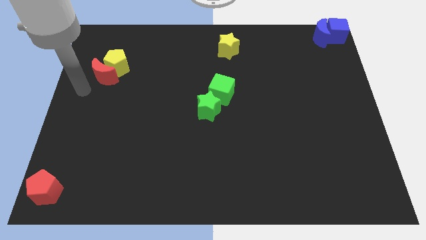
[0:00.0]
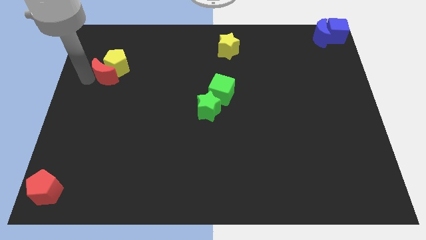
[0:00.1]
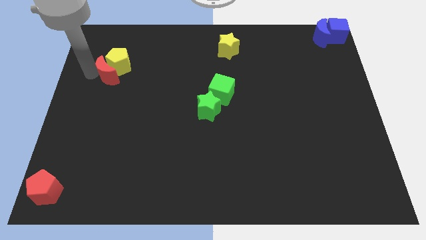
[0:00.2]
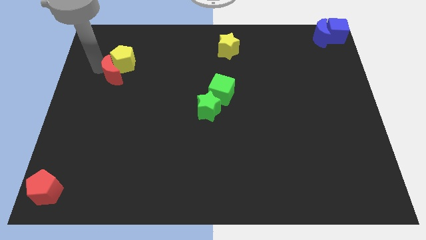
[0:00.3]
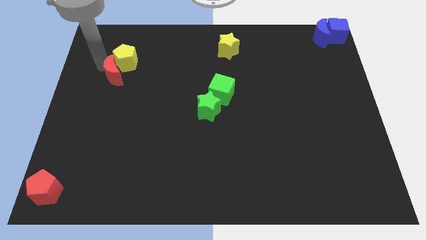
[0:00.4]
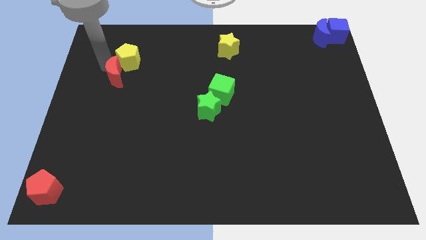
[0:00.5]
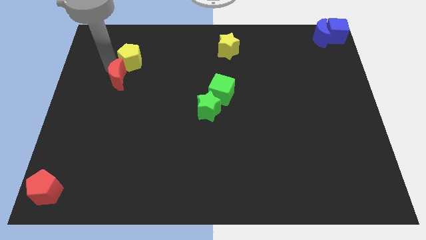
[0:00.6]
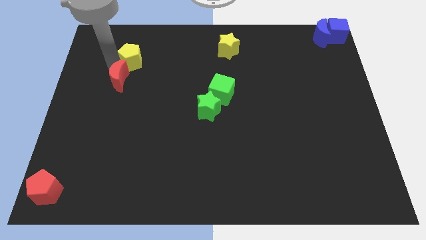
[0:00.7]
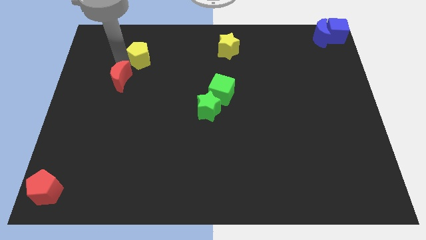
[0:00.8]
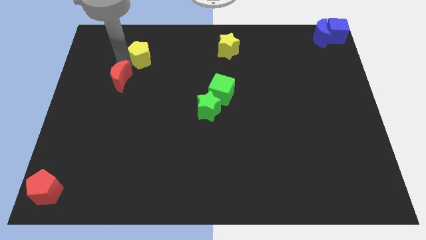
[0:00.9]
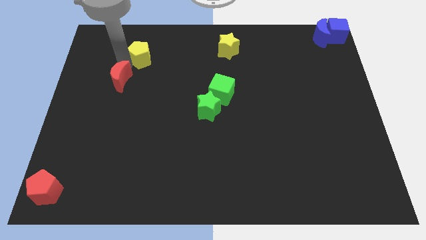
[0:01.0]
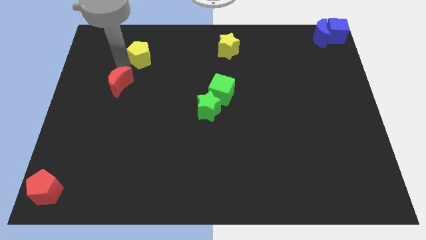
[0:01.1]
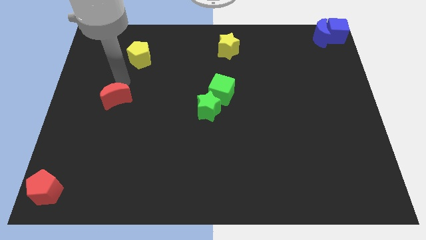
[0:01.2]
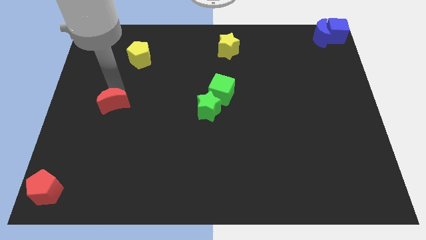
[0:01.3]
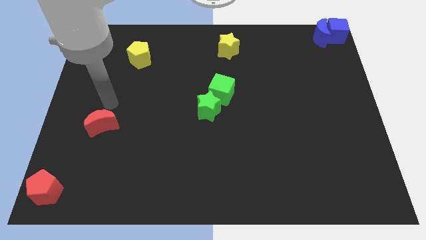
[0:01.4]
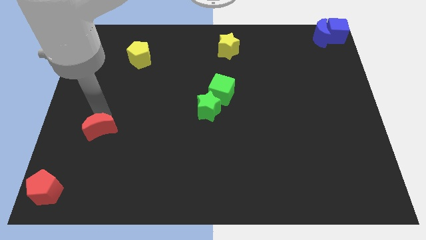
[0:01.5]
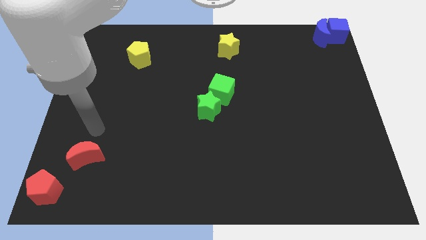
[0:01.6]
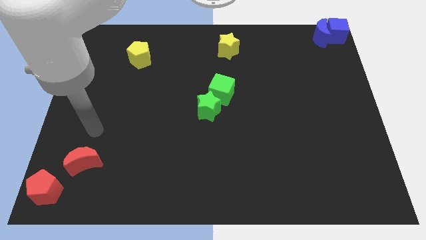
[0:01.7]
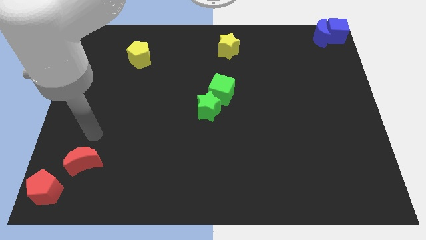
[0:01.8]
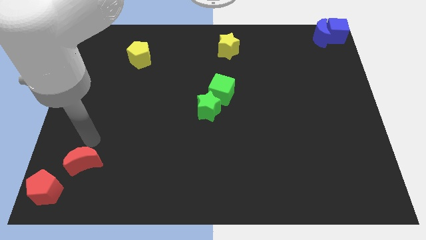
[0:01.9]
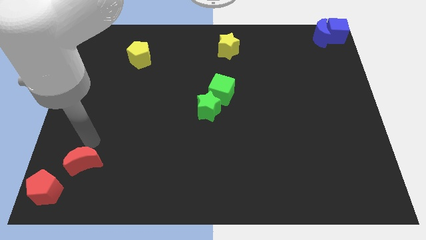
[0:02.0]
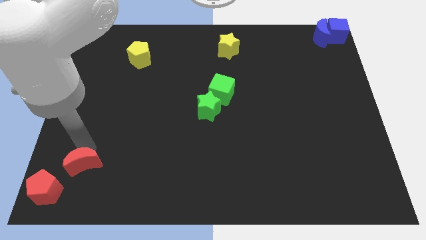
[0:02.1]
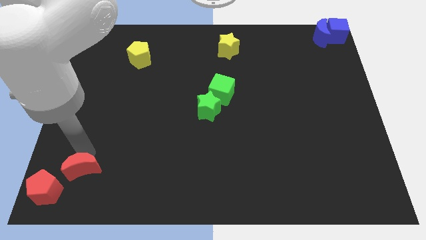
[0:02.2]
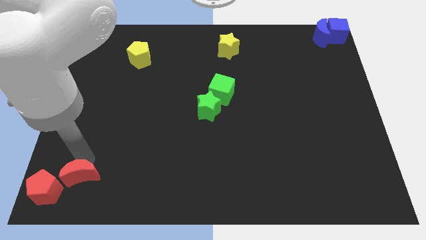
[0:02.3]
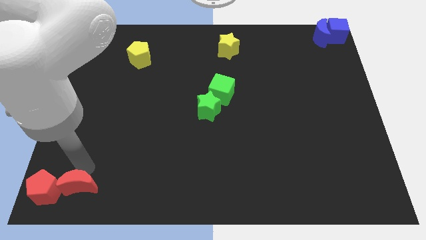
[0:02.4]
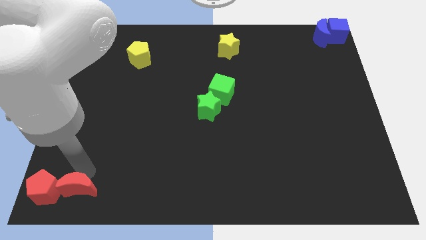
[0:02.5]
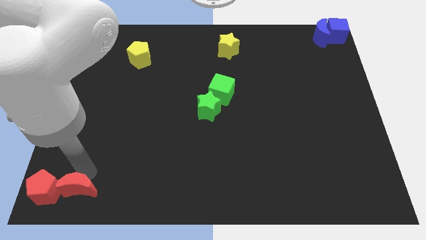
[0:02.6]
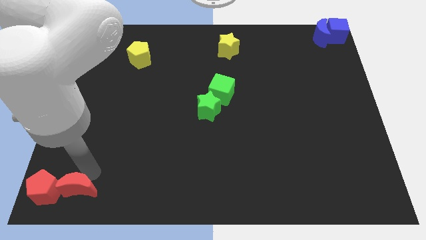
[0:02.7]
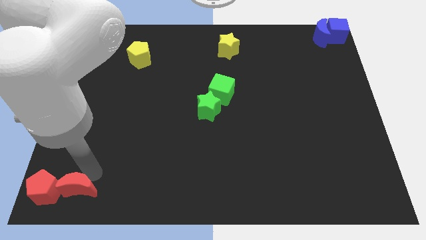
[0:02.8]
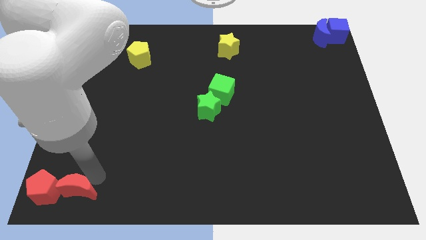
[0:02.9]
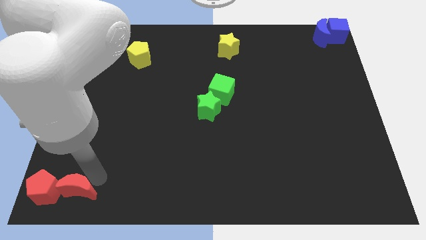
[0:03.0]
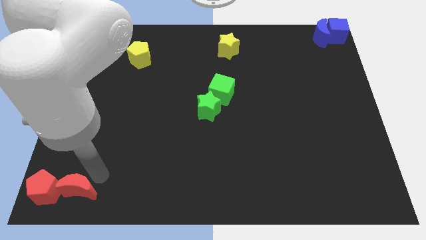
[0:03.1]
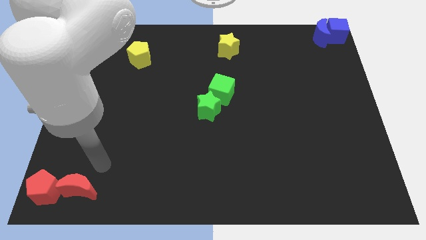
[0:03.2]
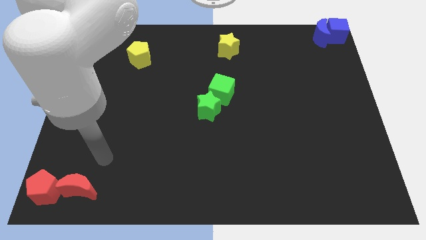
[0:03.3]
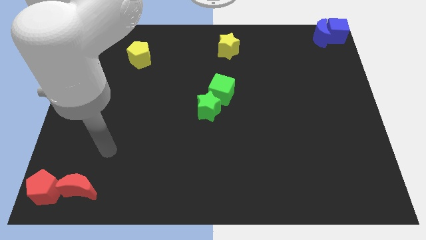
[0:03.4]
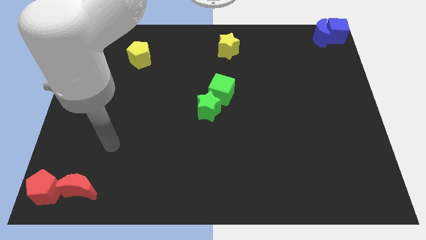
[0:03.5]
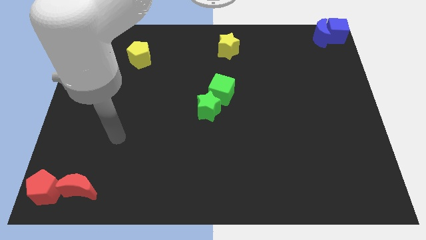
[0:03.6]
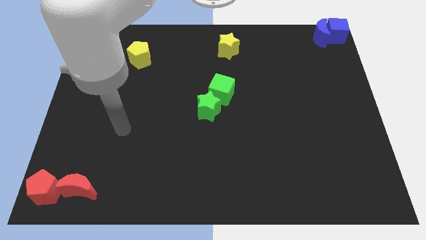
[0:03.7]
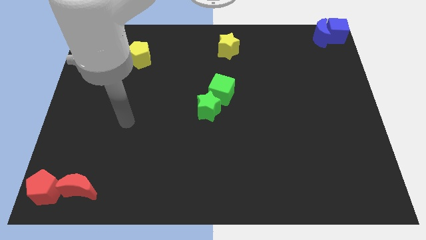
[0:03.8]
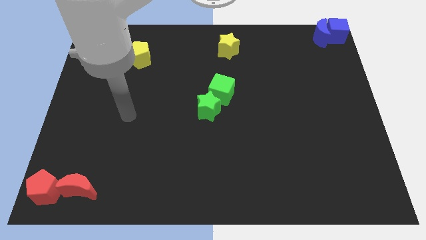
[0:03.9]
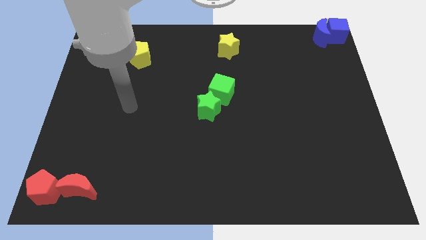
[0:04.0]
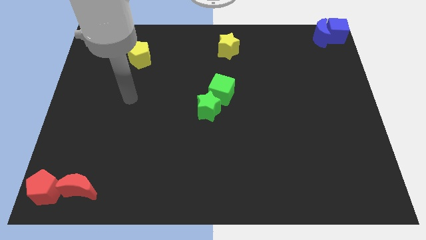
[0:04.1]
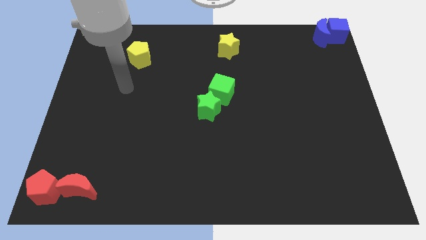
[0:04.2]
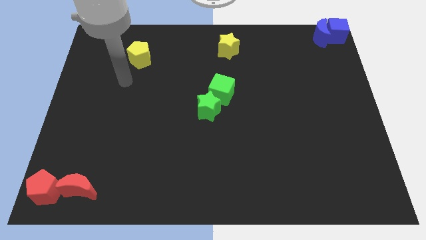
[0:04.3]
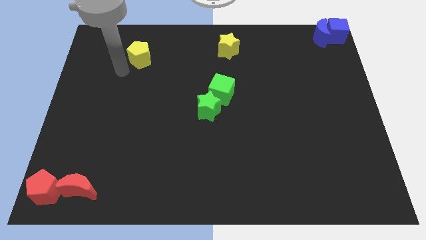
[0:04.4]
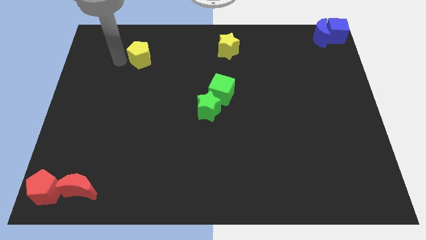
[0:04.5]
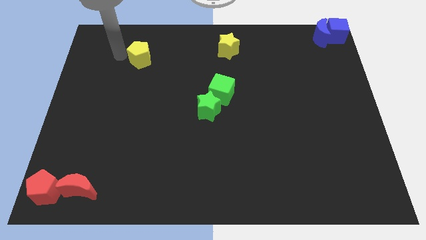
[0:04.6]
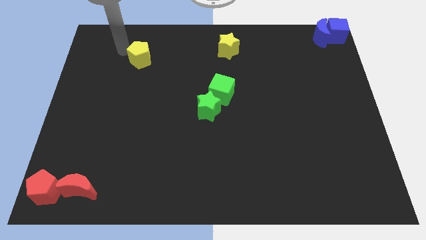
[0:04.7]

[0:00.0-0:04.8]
place red crescent to the right of red pentagon

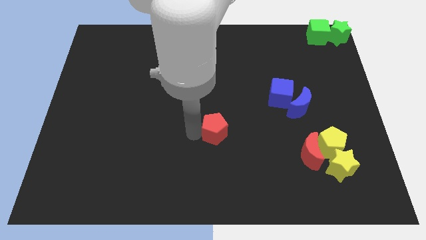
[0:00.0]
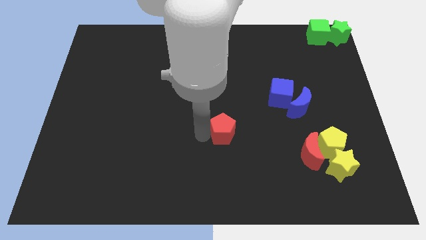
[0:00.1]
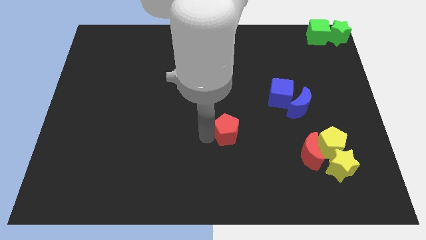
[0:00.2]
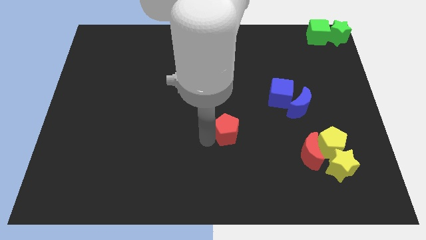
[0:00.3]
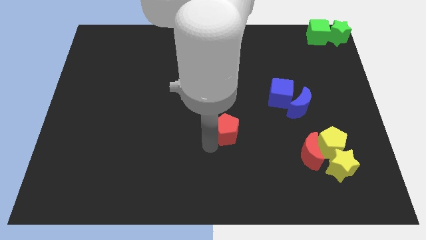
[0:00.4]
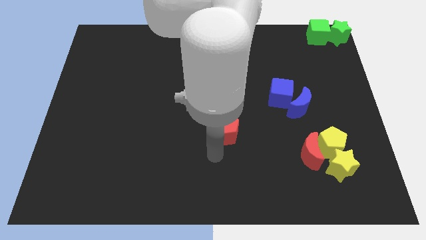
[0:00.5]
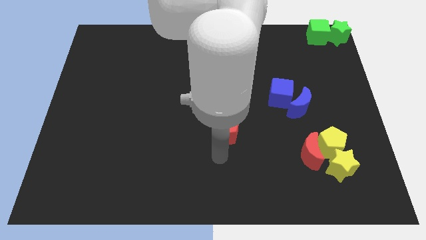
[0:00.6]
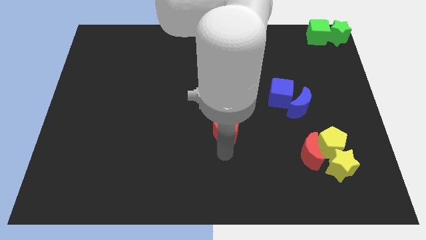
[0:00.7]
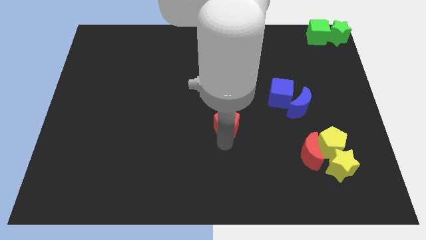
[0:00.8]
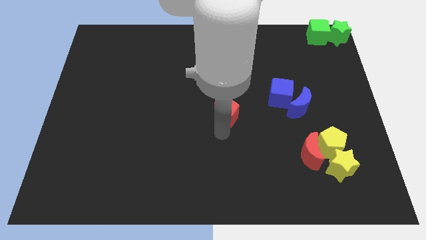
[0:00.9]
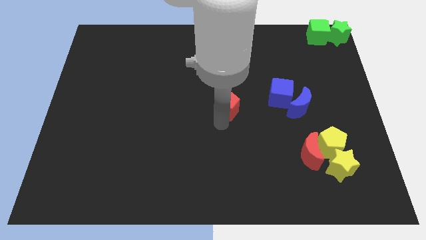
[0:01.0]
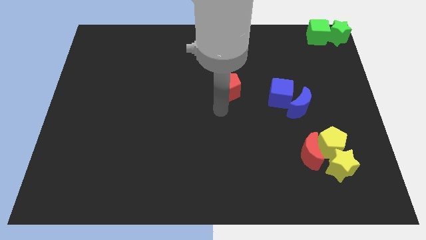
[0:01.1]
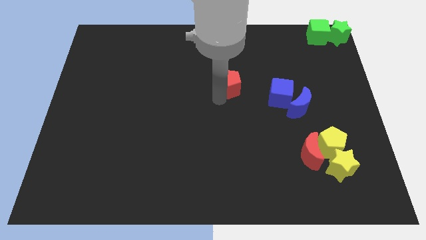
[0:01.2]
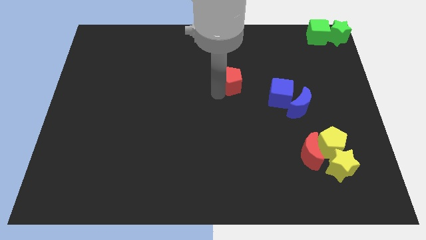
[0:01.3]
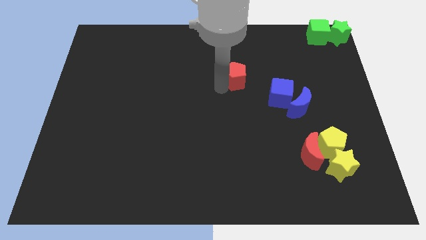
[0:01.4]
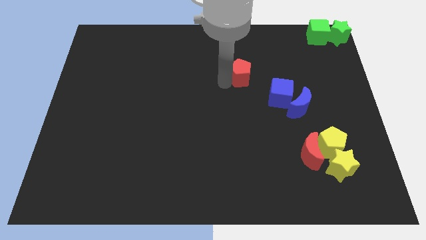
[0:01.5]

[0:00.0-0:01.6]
move the red pentagon to the top

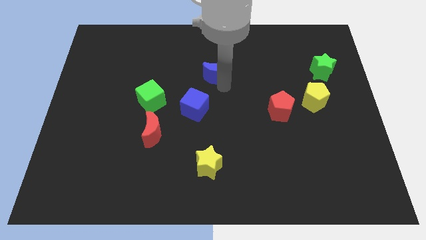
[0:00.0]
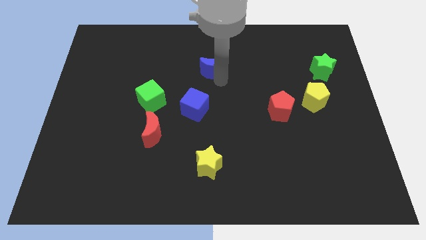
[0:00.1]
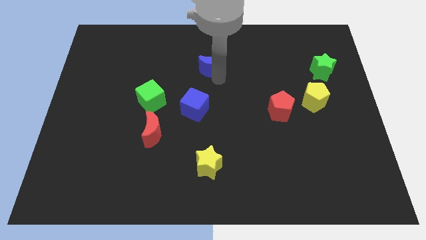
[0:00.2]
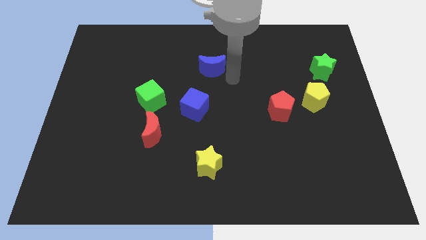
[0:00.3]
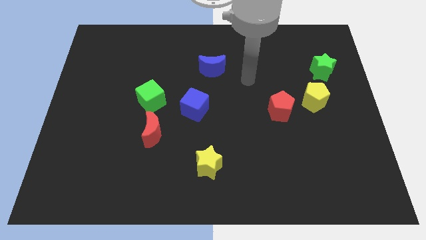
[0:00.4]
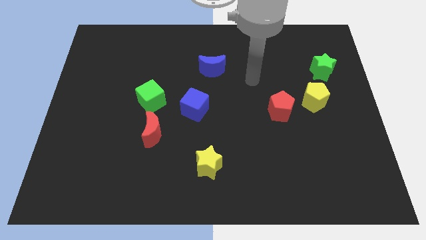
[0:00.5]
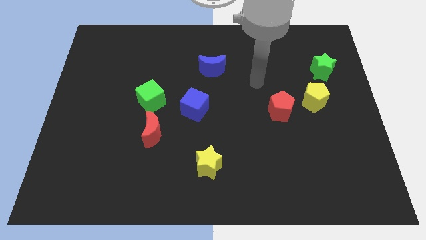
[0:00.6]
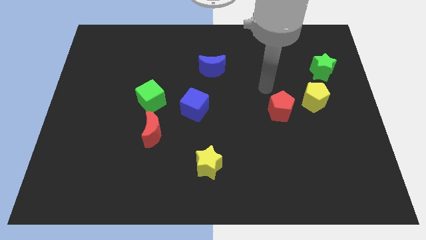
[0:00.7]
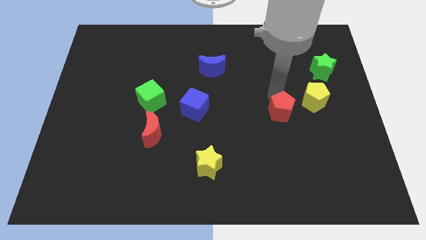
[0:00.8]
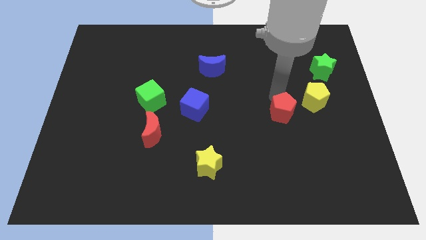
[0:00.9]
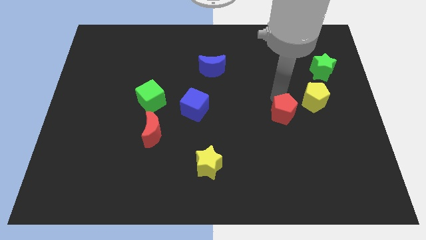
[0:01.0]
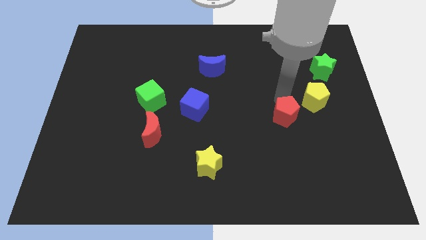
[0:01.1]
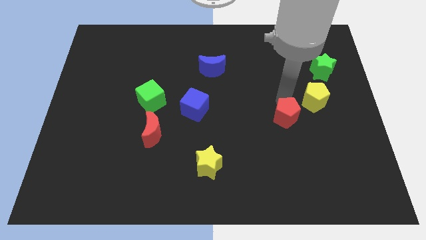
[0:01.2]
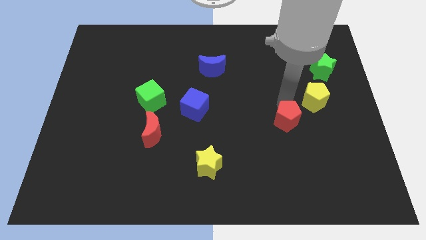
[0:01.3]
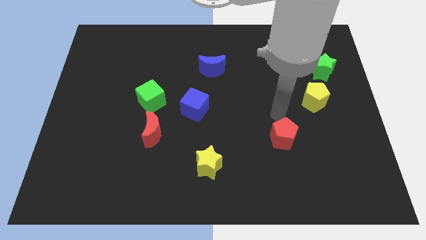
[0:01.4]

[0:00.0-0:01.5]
slightly move the red pentagon towards the down

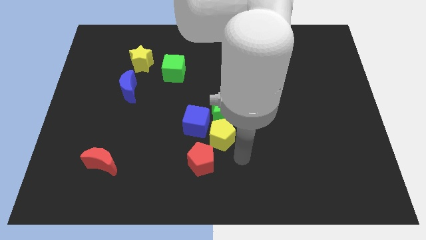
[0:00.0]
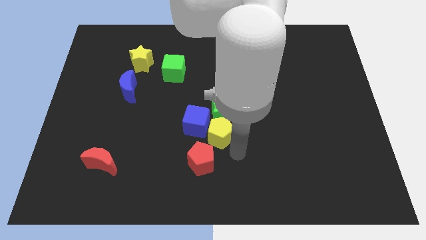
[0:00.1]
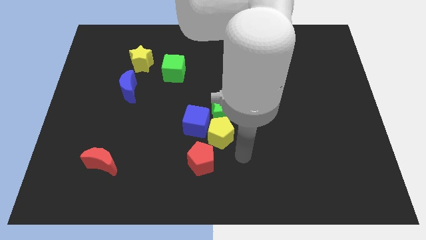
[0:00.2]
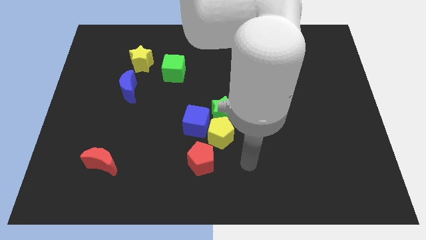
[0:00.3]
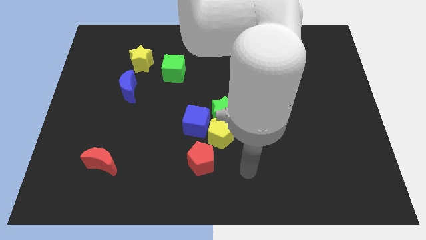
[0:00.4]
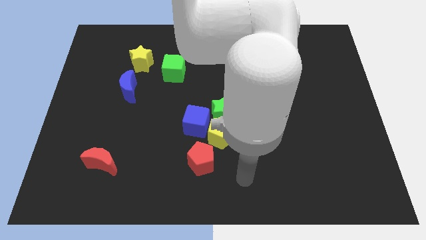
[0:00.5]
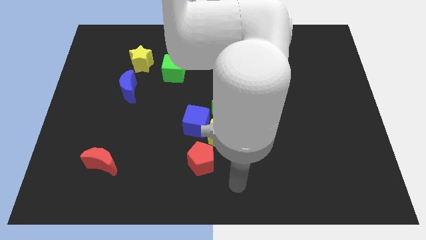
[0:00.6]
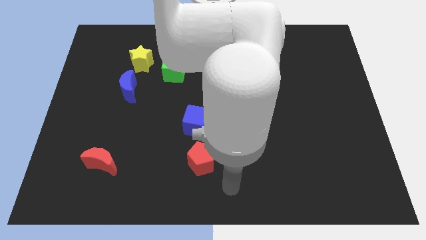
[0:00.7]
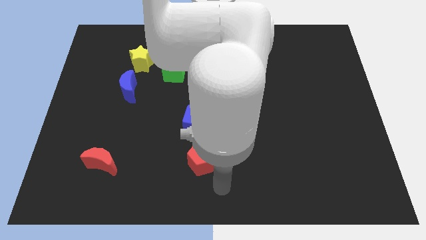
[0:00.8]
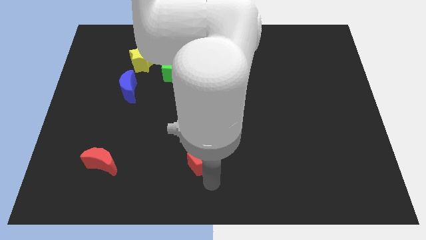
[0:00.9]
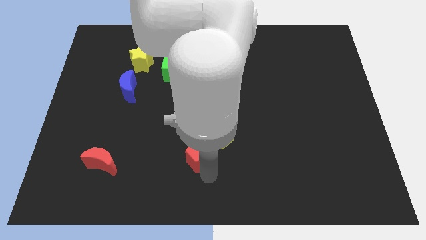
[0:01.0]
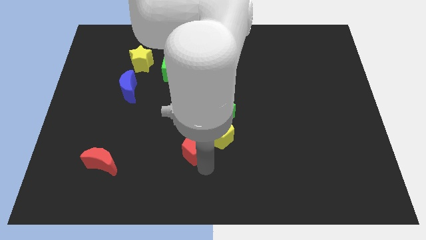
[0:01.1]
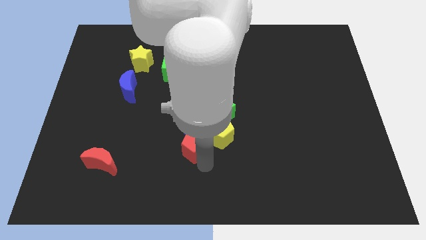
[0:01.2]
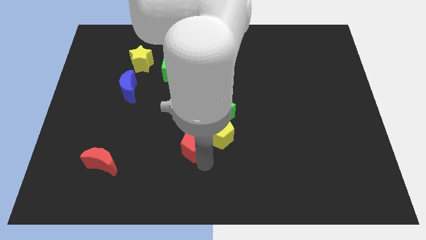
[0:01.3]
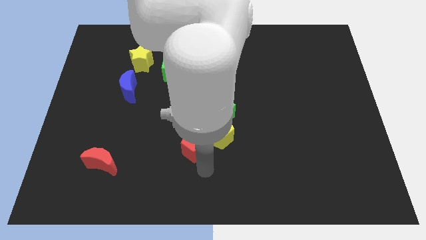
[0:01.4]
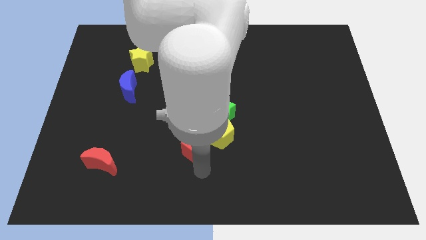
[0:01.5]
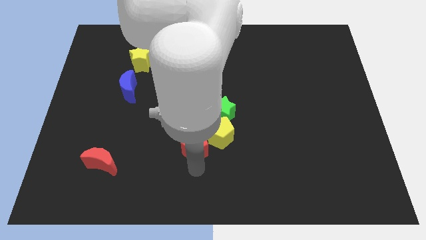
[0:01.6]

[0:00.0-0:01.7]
push the red pentagon slightly upwards
